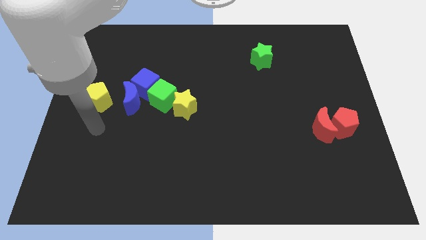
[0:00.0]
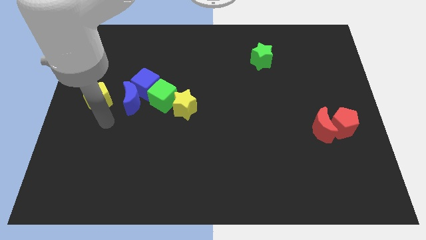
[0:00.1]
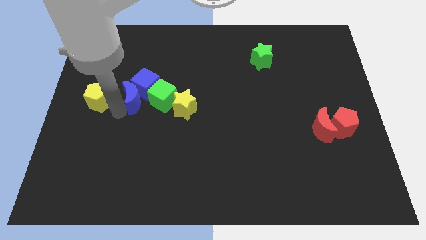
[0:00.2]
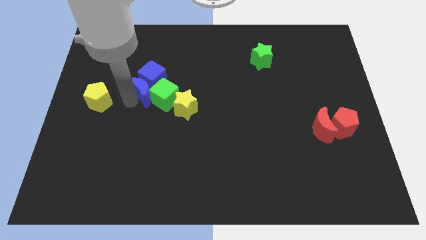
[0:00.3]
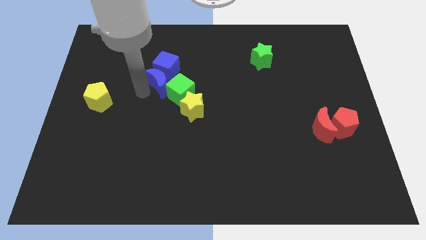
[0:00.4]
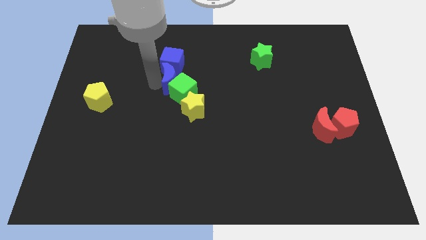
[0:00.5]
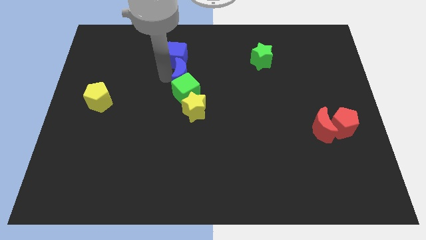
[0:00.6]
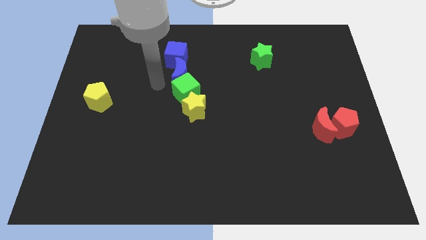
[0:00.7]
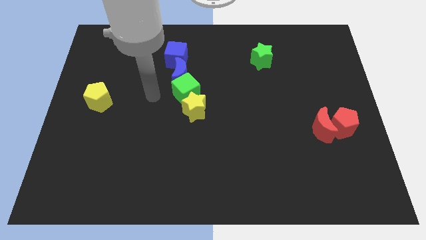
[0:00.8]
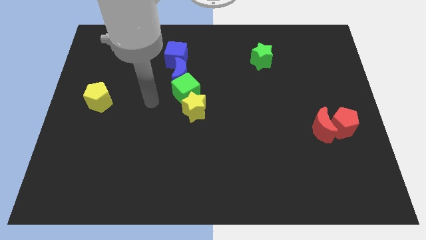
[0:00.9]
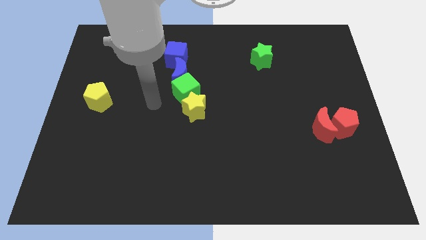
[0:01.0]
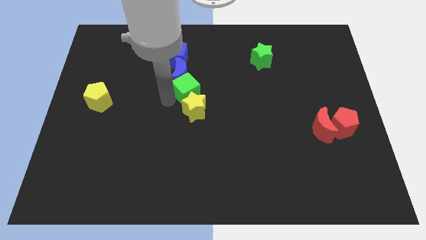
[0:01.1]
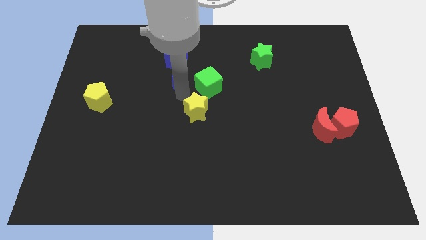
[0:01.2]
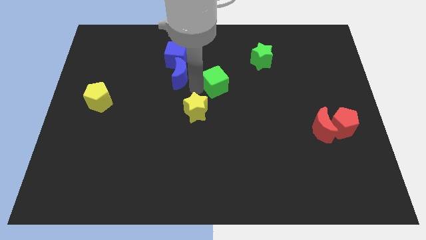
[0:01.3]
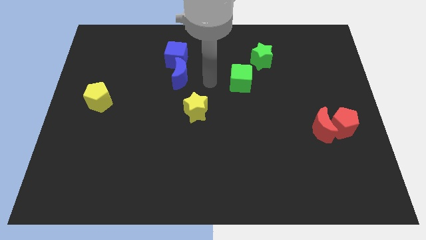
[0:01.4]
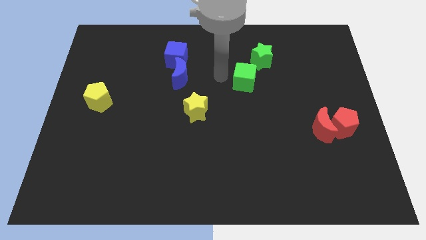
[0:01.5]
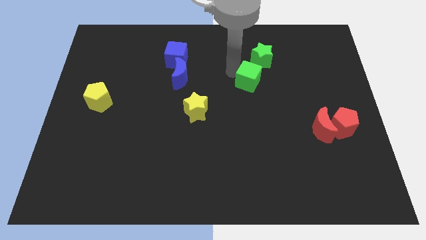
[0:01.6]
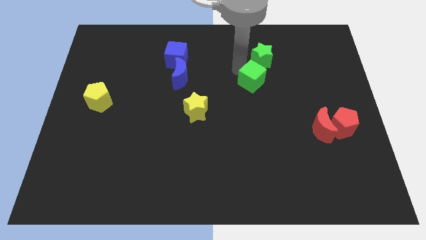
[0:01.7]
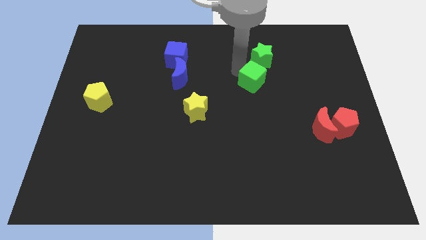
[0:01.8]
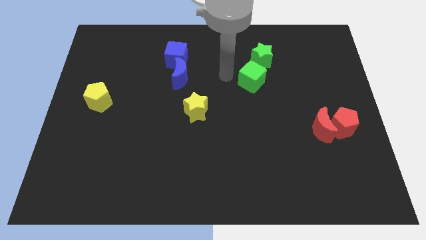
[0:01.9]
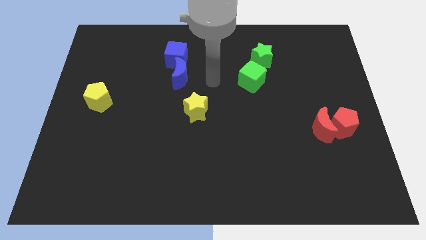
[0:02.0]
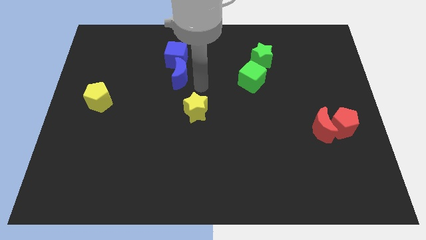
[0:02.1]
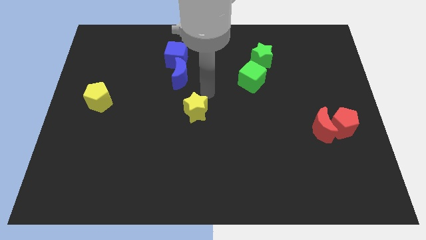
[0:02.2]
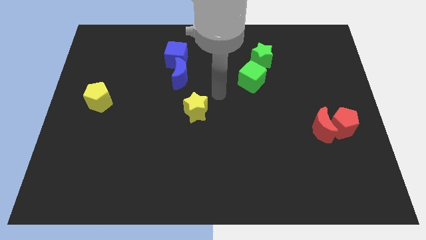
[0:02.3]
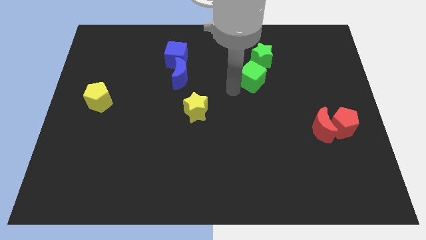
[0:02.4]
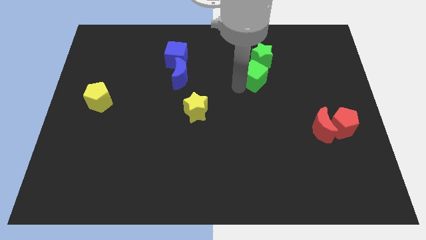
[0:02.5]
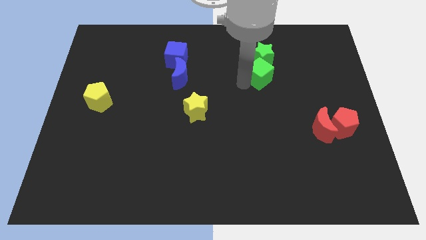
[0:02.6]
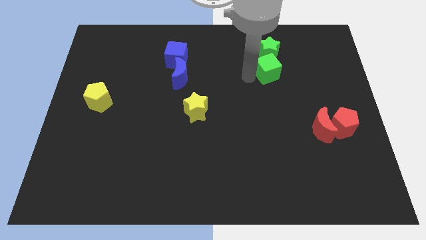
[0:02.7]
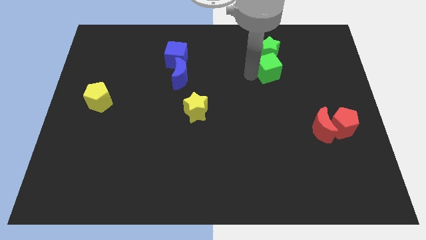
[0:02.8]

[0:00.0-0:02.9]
separate the yellow star and the green cube

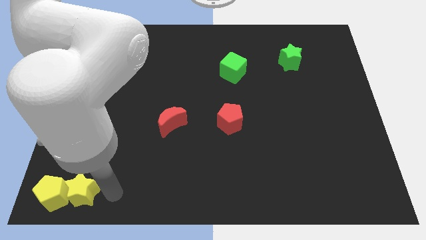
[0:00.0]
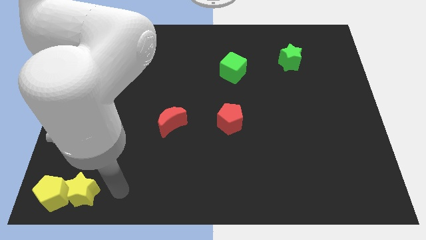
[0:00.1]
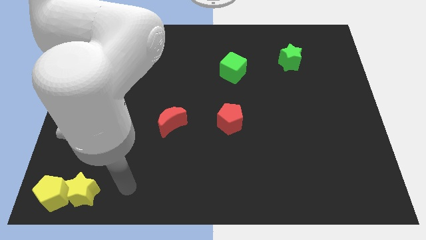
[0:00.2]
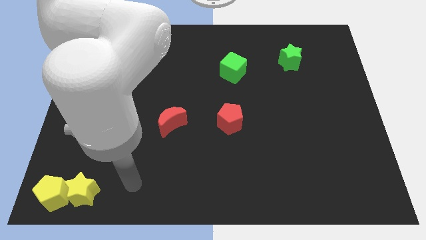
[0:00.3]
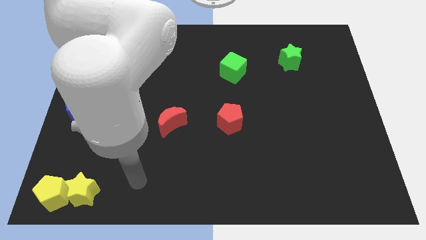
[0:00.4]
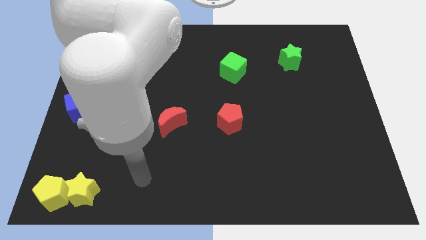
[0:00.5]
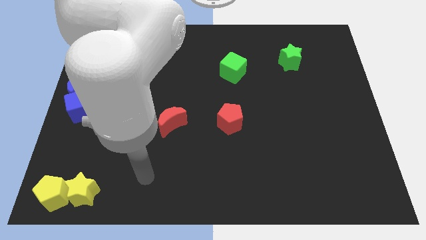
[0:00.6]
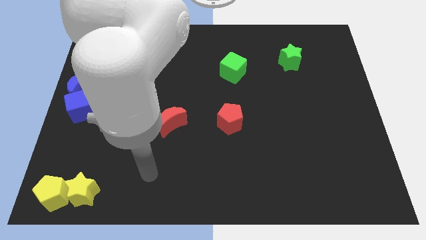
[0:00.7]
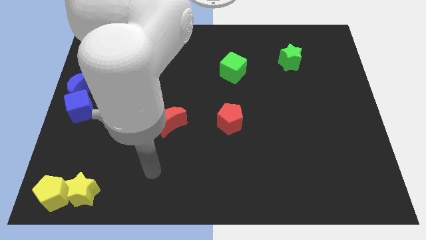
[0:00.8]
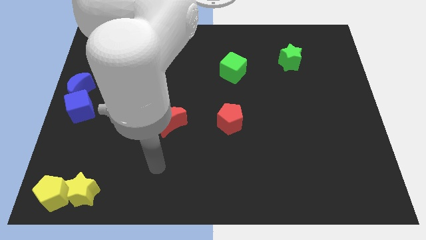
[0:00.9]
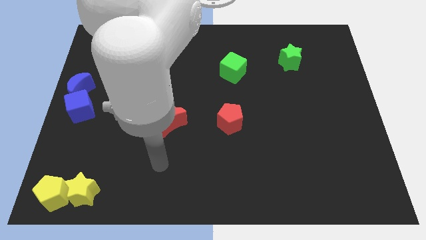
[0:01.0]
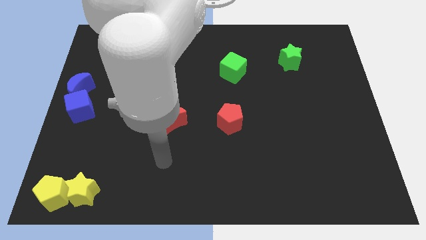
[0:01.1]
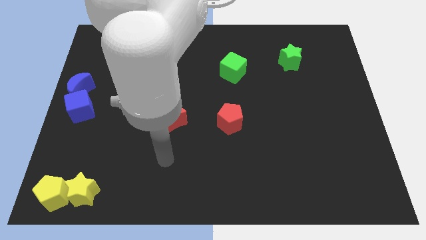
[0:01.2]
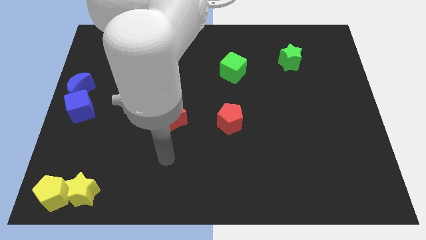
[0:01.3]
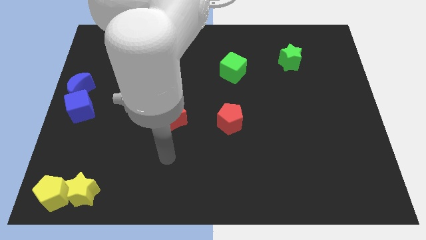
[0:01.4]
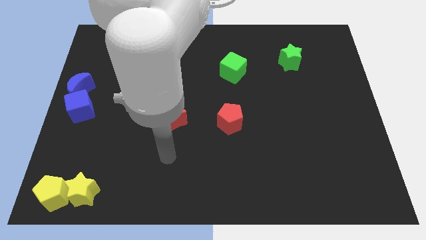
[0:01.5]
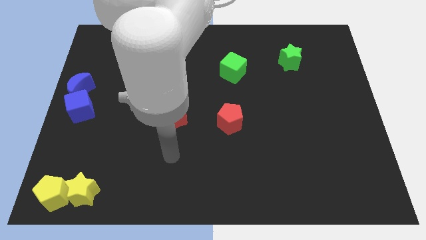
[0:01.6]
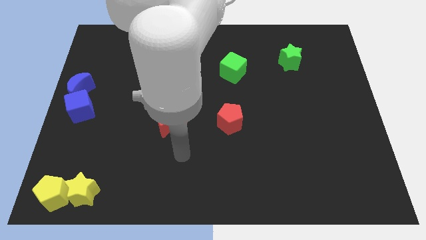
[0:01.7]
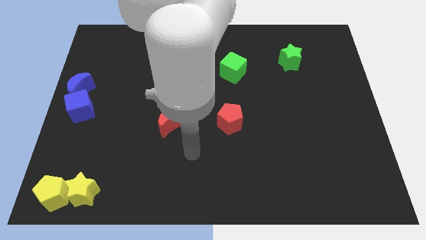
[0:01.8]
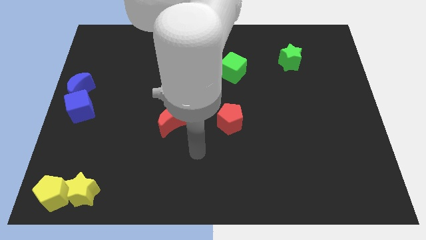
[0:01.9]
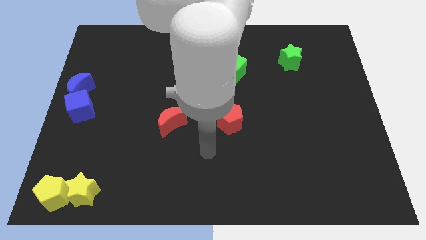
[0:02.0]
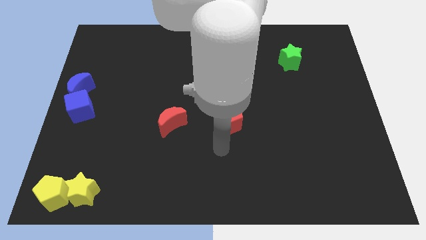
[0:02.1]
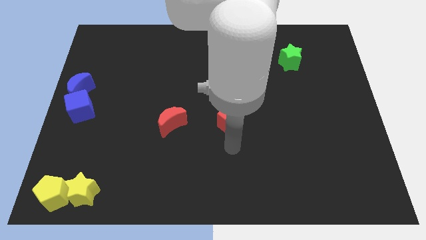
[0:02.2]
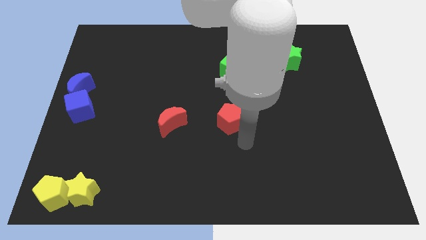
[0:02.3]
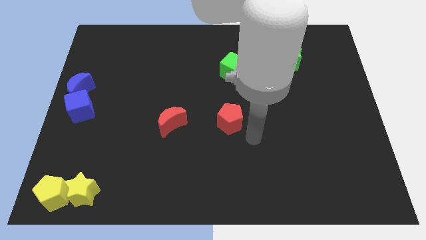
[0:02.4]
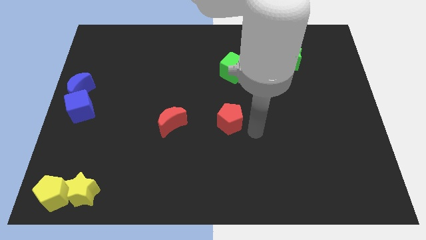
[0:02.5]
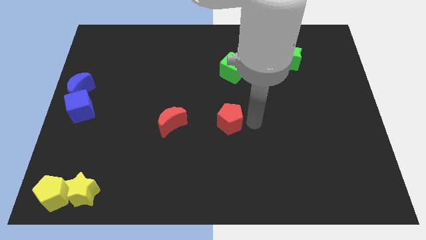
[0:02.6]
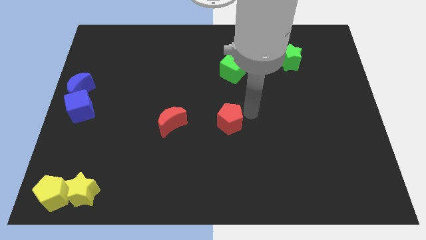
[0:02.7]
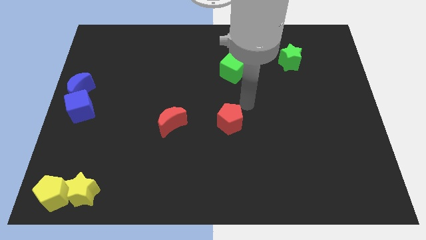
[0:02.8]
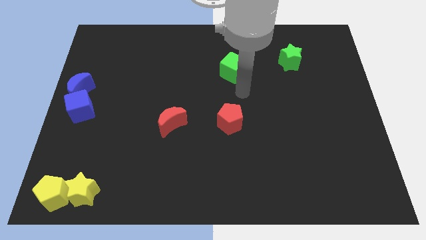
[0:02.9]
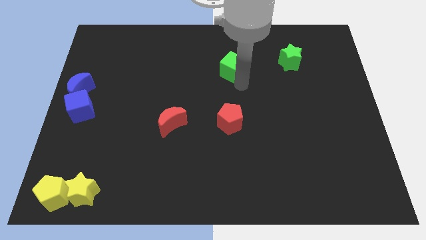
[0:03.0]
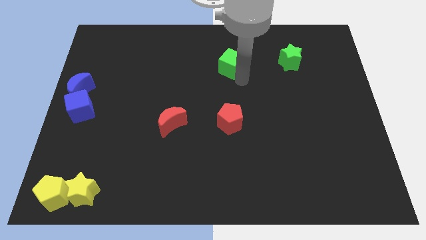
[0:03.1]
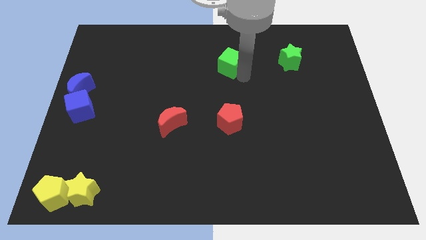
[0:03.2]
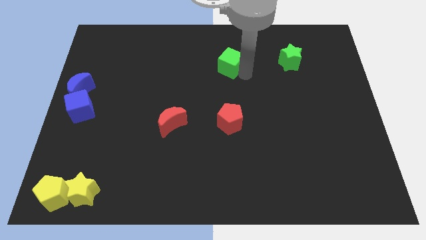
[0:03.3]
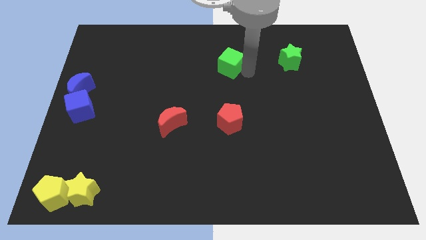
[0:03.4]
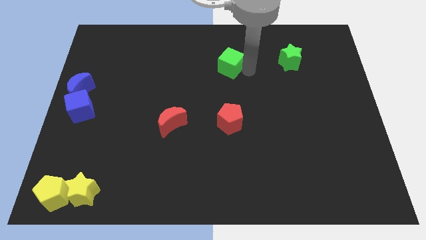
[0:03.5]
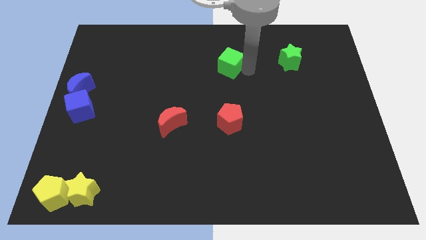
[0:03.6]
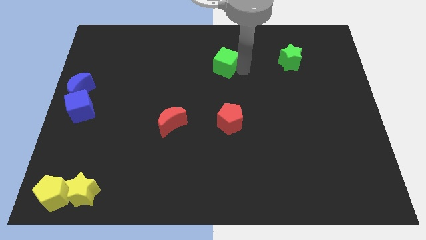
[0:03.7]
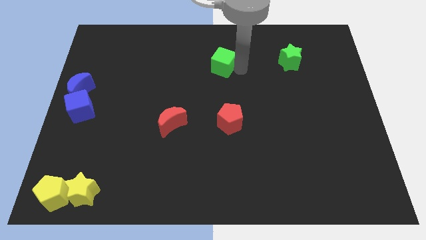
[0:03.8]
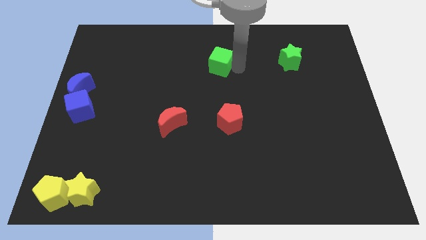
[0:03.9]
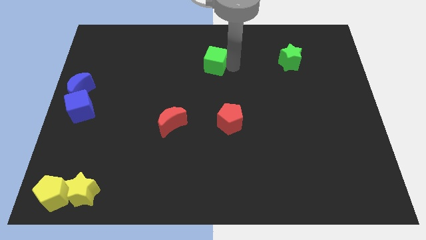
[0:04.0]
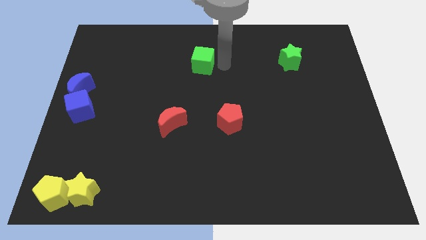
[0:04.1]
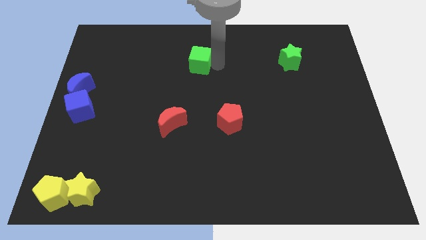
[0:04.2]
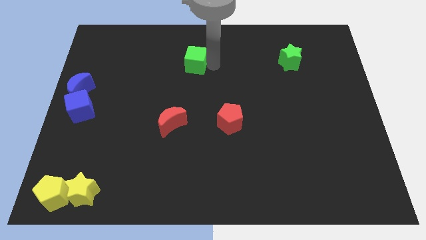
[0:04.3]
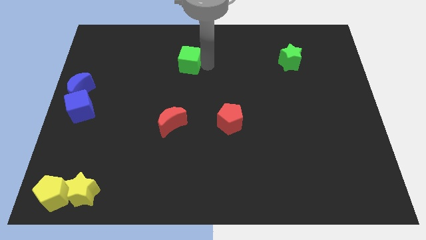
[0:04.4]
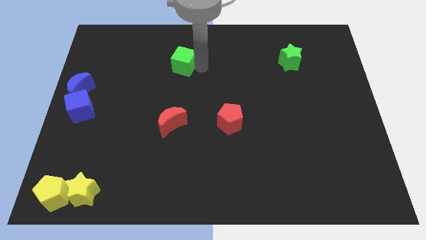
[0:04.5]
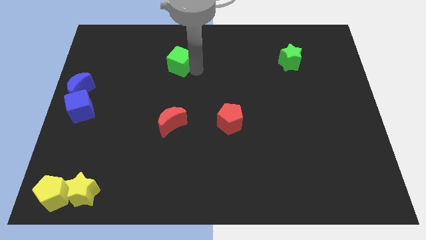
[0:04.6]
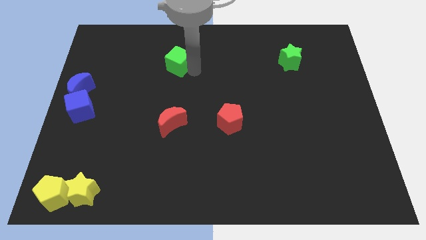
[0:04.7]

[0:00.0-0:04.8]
push the green cube vertically to the top of the red crescent

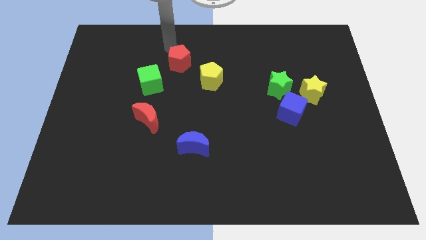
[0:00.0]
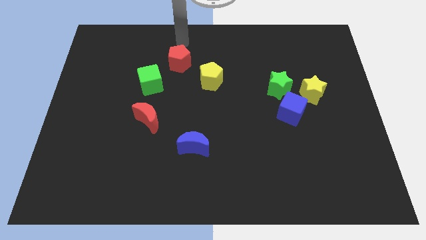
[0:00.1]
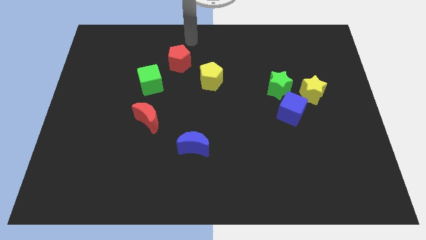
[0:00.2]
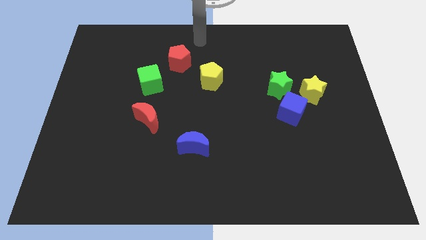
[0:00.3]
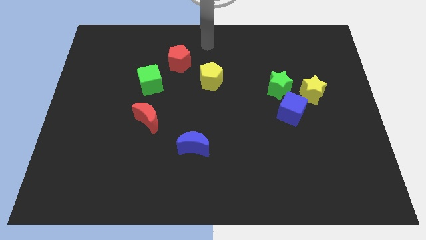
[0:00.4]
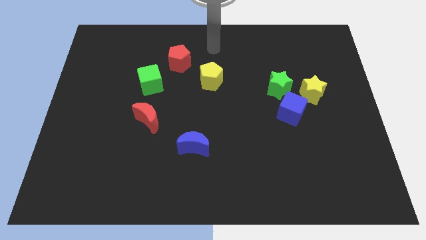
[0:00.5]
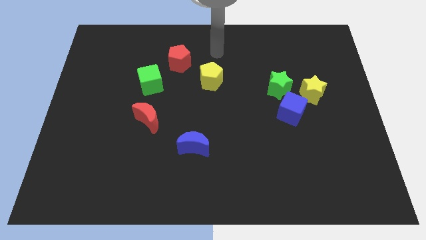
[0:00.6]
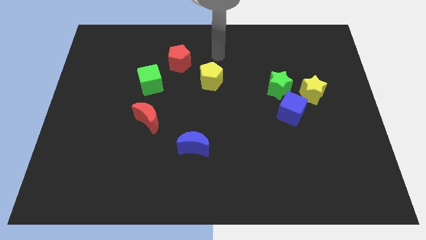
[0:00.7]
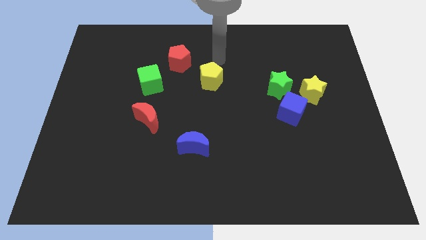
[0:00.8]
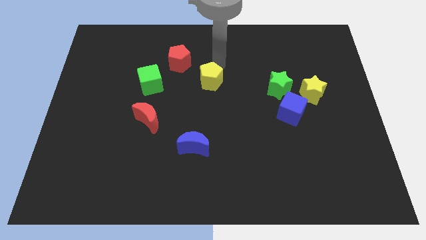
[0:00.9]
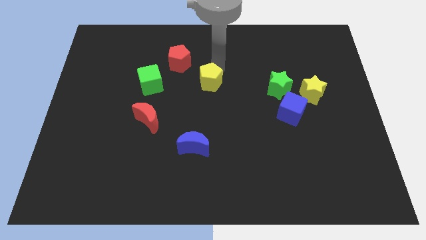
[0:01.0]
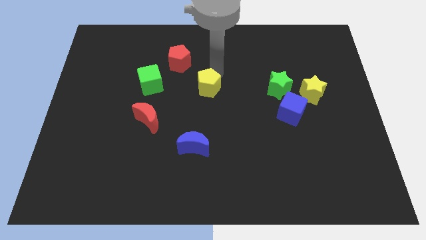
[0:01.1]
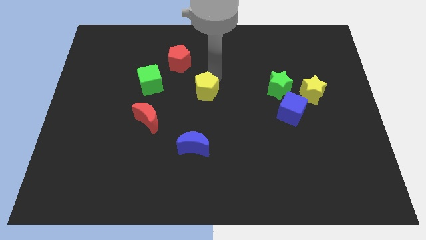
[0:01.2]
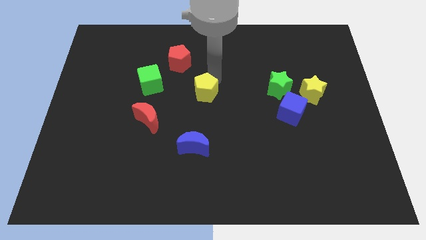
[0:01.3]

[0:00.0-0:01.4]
move yellow pentagon slightly down
